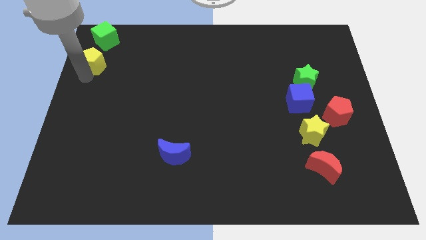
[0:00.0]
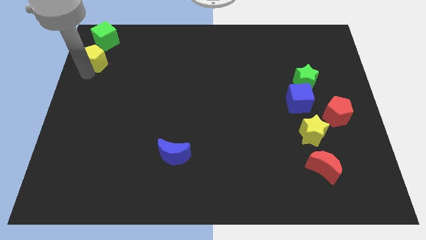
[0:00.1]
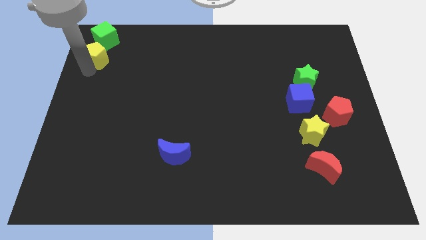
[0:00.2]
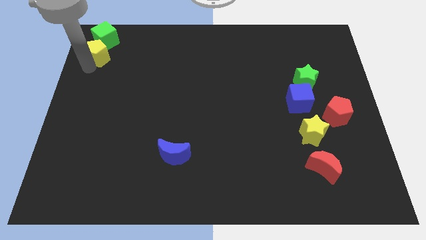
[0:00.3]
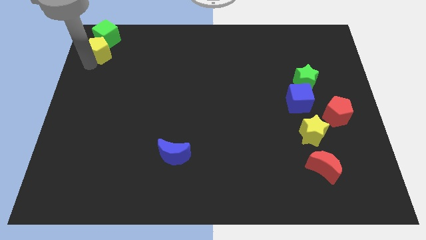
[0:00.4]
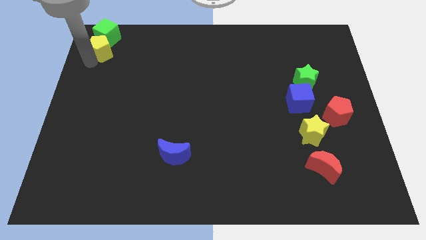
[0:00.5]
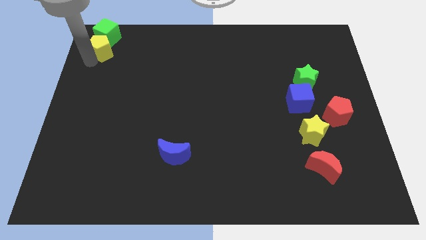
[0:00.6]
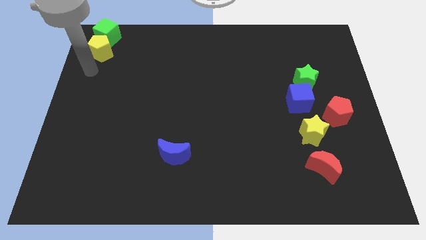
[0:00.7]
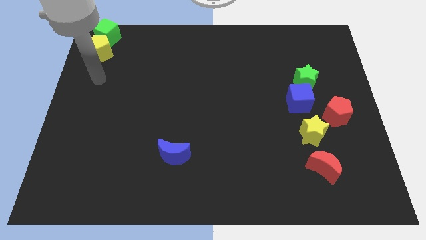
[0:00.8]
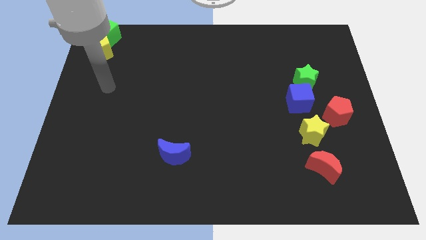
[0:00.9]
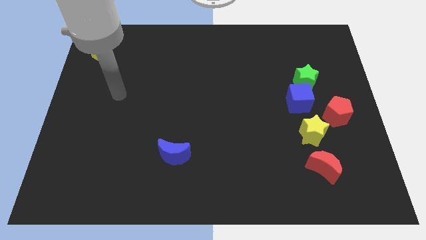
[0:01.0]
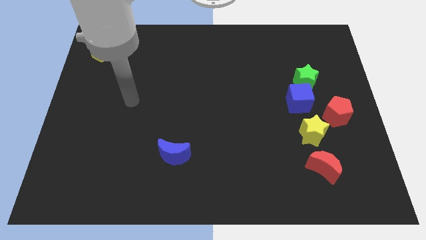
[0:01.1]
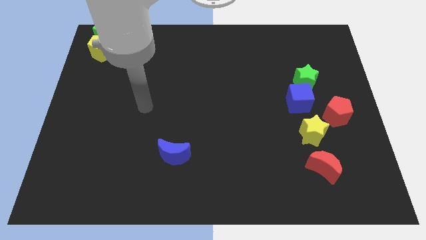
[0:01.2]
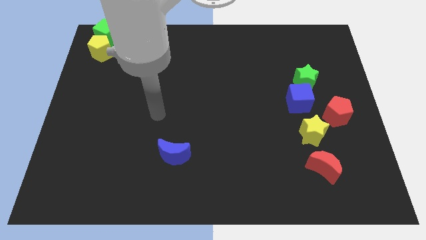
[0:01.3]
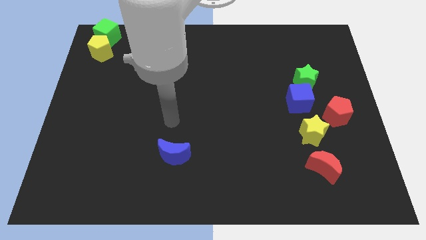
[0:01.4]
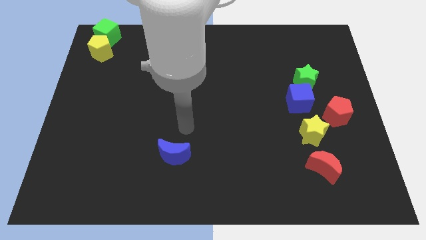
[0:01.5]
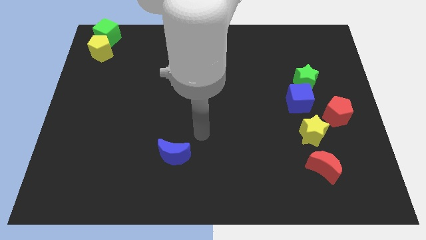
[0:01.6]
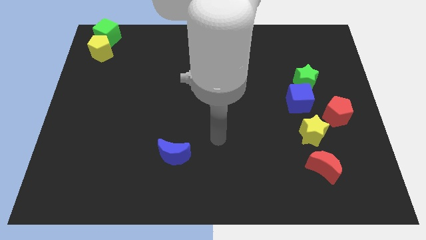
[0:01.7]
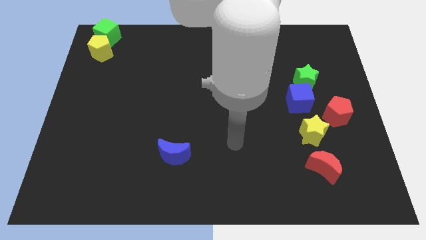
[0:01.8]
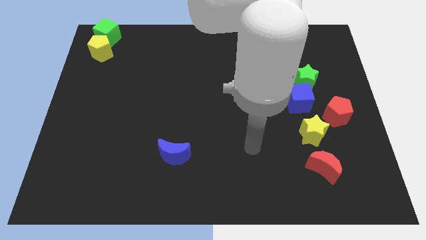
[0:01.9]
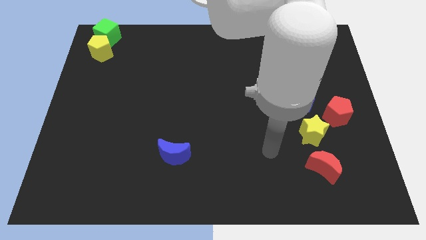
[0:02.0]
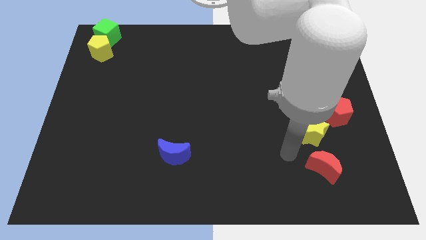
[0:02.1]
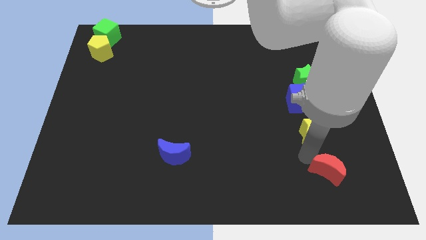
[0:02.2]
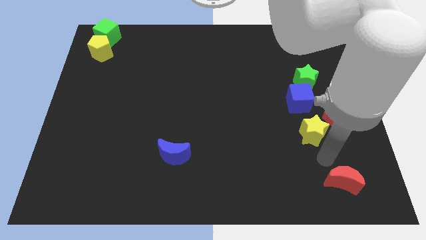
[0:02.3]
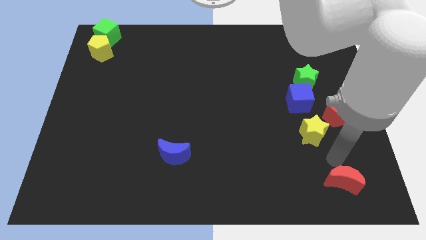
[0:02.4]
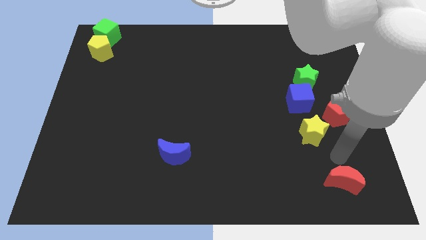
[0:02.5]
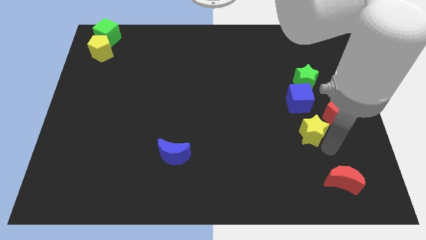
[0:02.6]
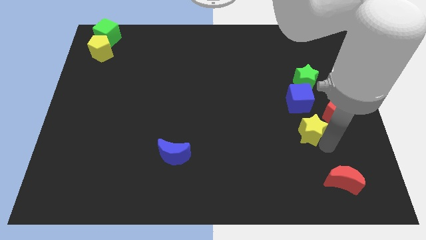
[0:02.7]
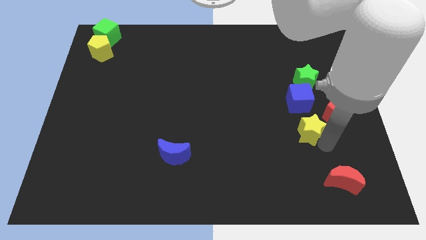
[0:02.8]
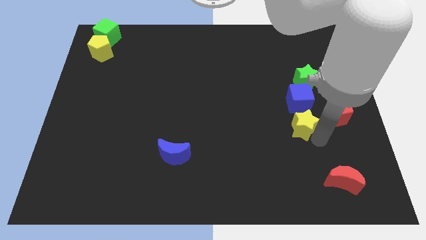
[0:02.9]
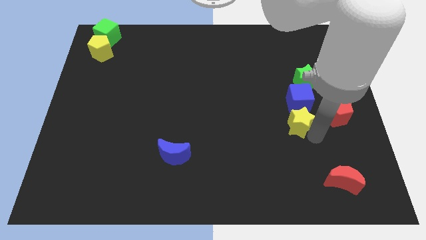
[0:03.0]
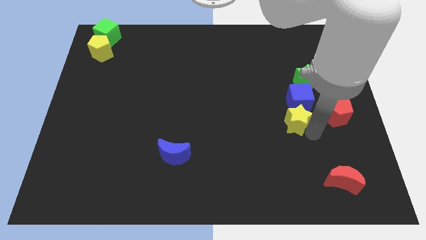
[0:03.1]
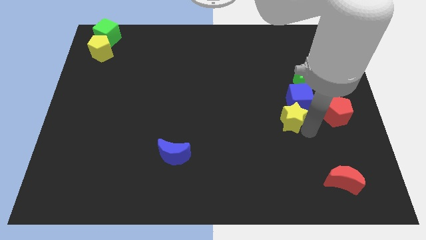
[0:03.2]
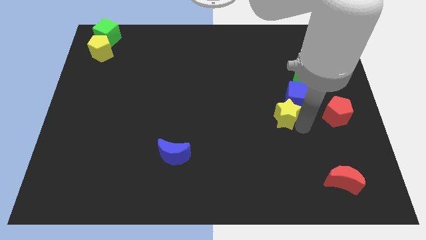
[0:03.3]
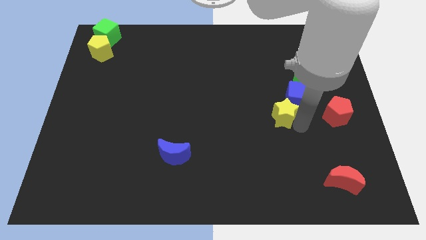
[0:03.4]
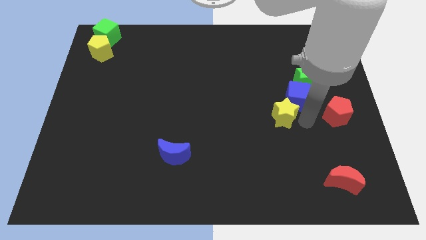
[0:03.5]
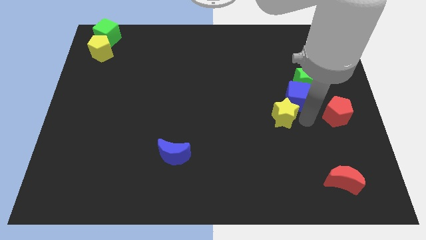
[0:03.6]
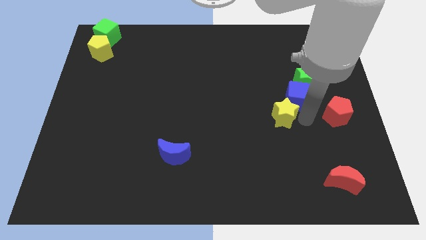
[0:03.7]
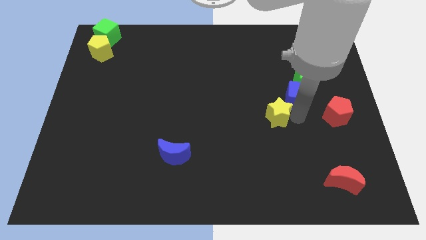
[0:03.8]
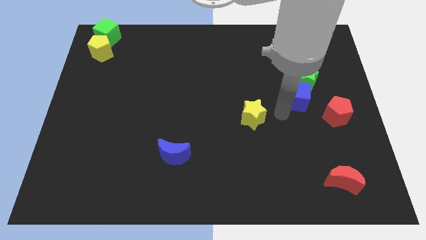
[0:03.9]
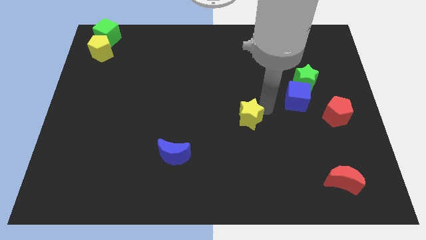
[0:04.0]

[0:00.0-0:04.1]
separate the yellow star from the red pentagon and red crescent

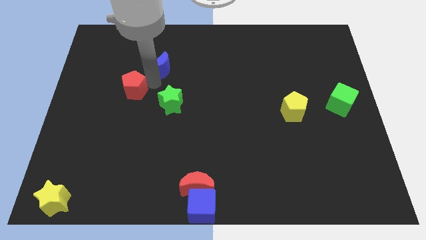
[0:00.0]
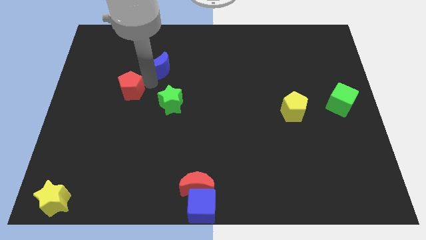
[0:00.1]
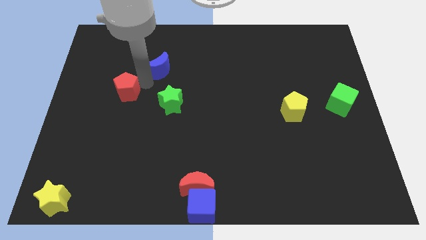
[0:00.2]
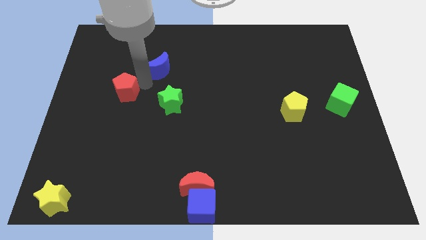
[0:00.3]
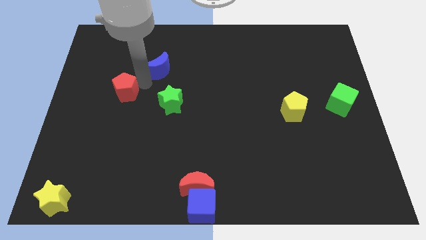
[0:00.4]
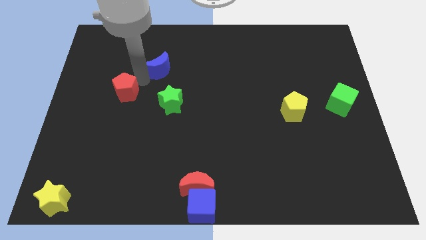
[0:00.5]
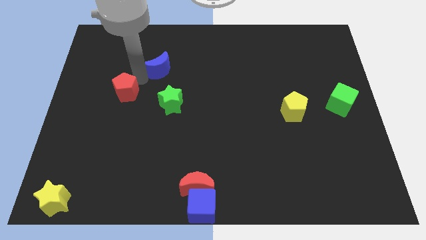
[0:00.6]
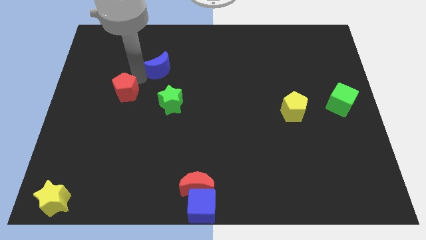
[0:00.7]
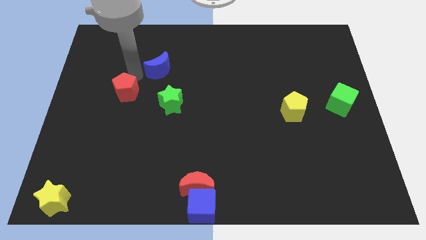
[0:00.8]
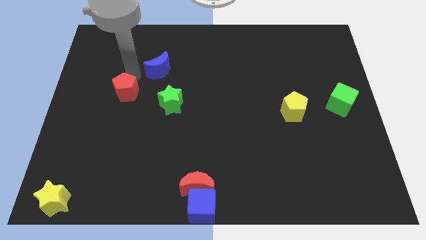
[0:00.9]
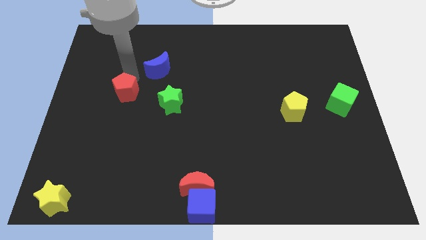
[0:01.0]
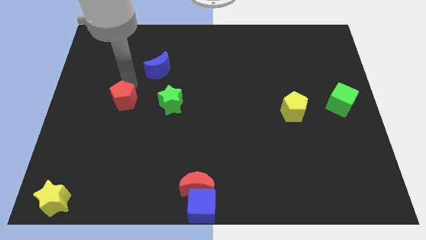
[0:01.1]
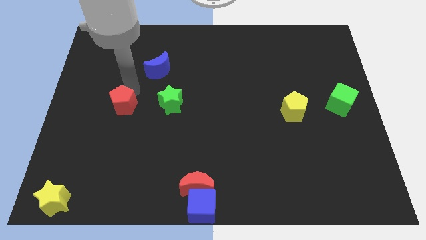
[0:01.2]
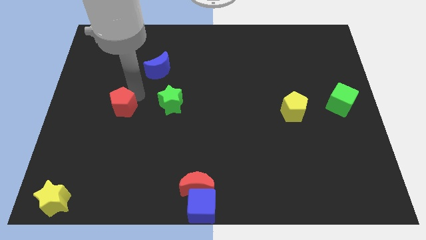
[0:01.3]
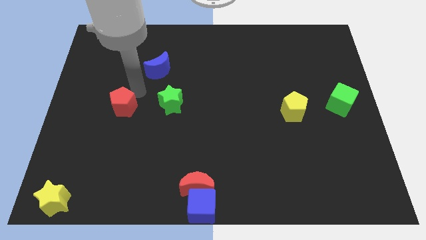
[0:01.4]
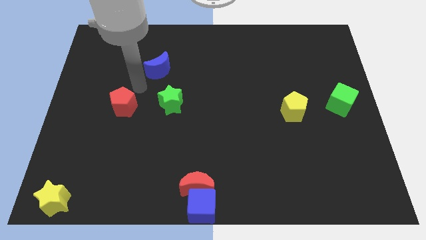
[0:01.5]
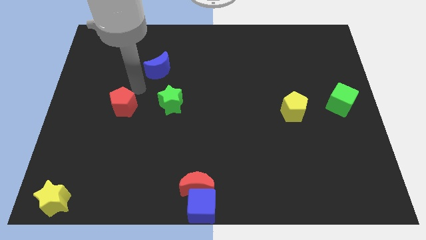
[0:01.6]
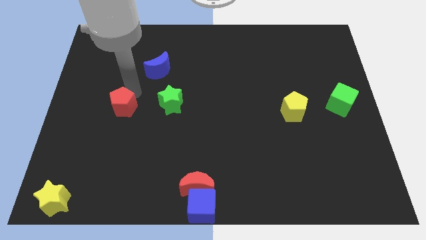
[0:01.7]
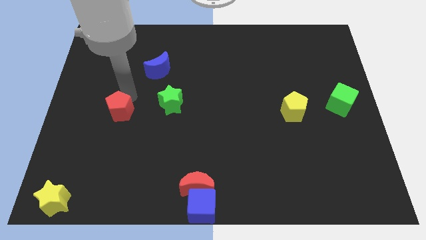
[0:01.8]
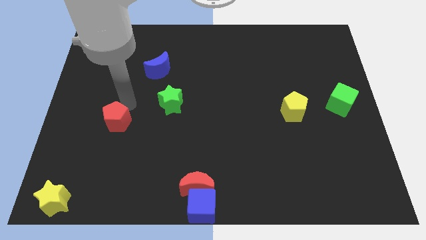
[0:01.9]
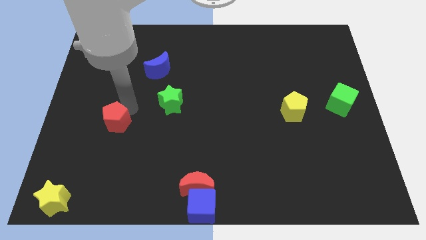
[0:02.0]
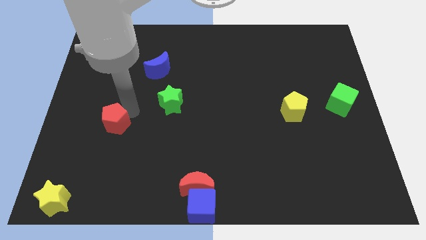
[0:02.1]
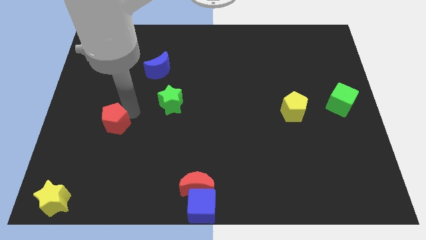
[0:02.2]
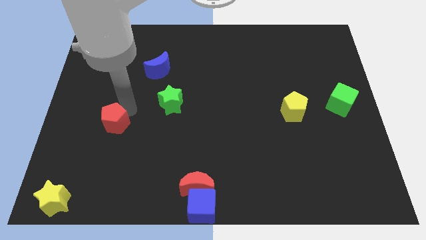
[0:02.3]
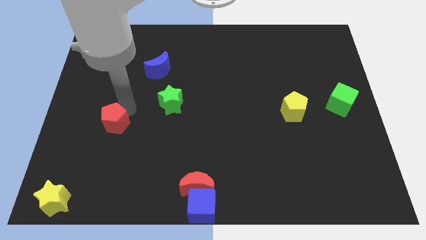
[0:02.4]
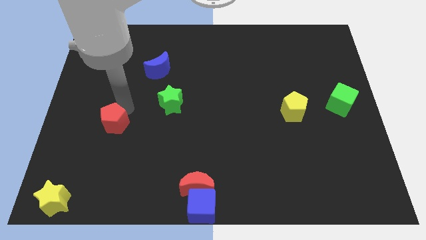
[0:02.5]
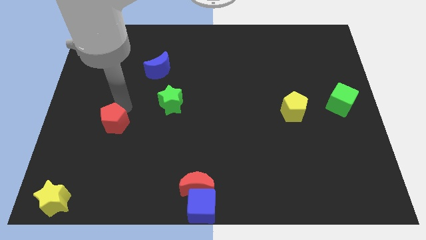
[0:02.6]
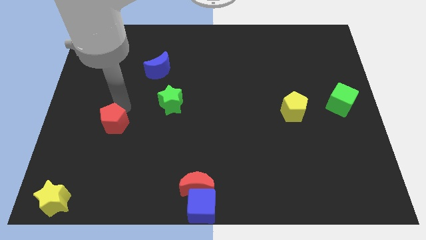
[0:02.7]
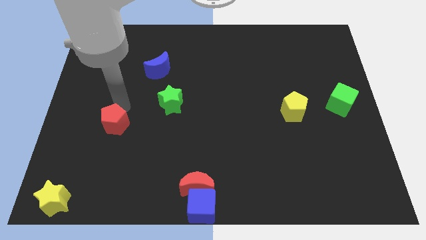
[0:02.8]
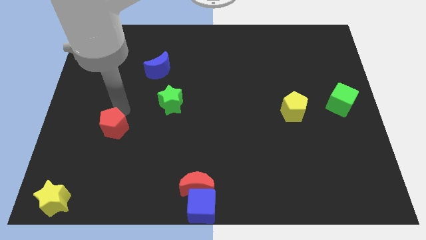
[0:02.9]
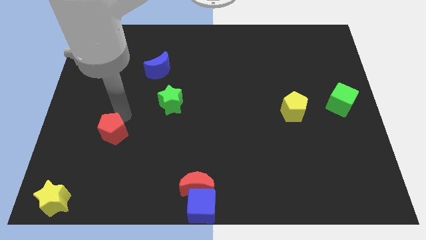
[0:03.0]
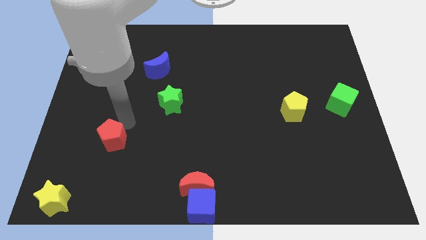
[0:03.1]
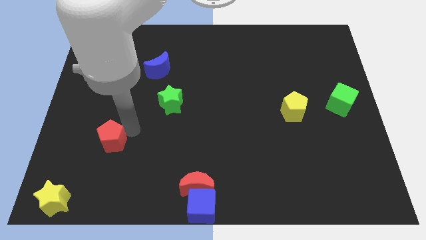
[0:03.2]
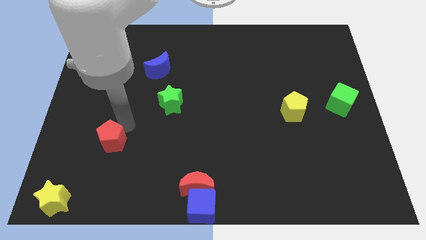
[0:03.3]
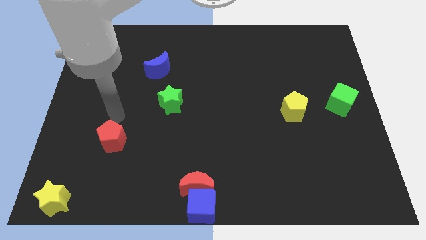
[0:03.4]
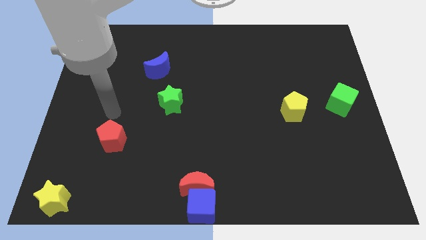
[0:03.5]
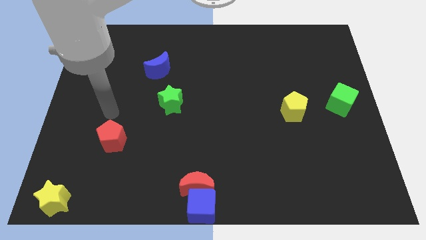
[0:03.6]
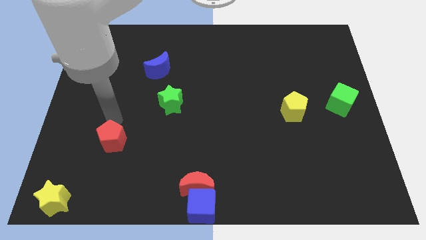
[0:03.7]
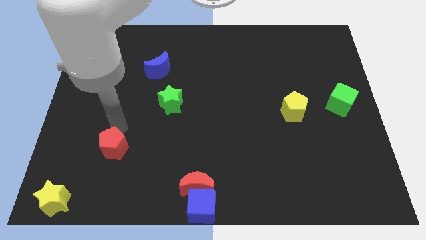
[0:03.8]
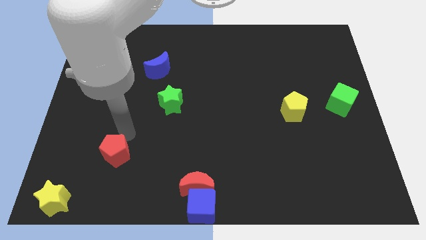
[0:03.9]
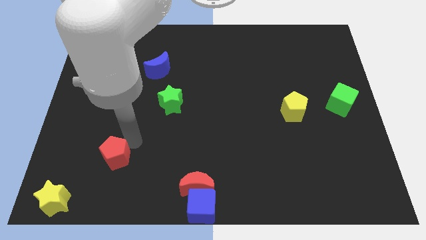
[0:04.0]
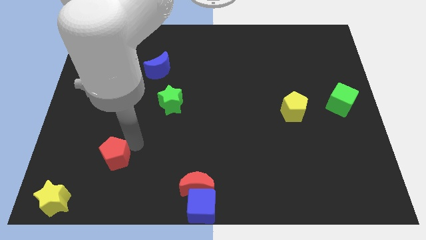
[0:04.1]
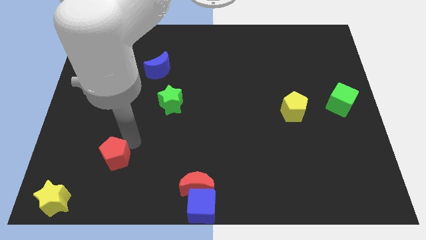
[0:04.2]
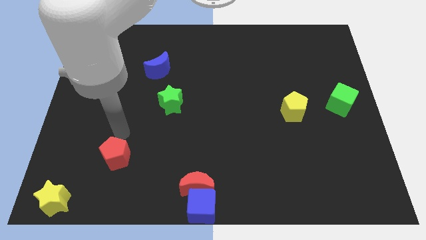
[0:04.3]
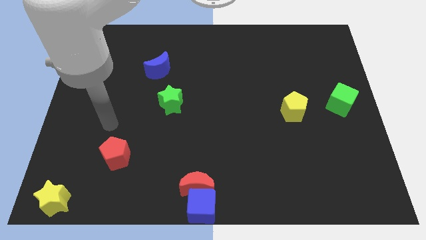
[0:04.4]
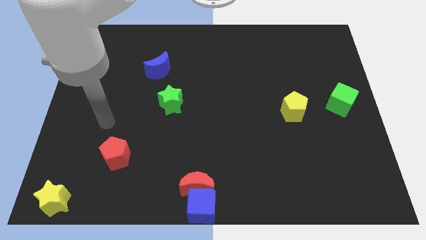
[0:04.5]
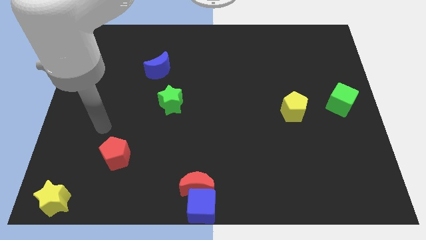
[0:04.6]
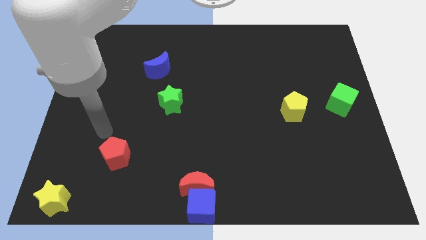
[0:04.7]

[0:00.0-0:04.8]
place the red pentagon in between the green star and yellow star
